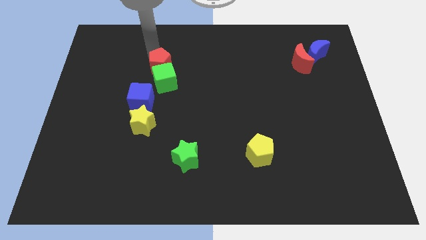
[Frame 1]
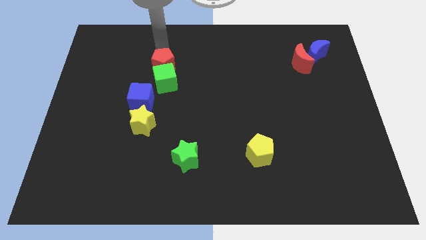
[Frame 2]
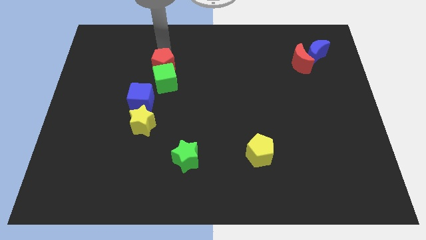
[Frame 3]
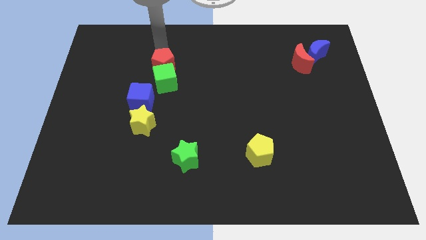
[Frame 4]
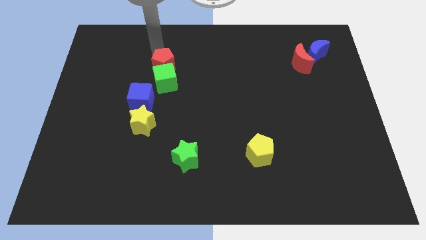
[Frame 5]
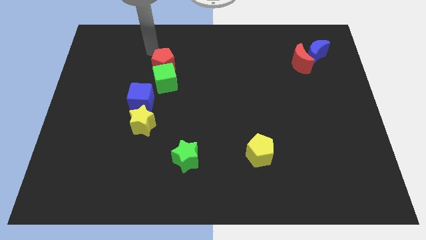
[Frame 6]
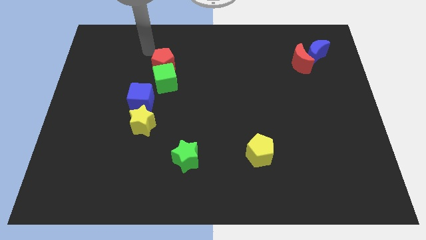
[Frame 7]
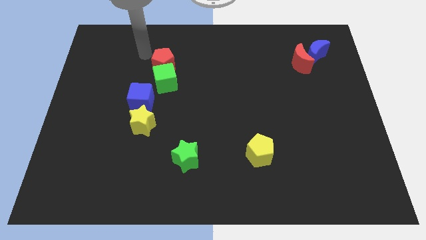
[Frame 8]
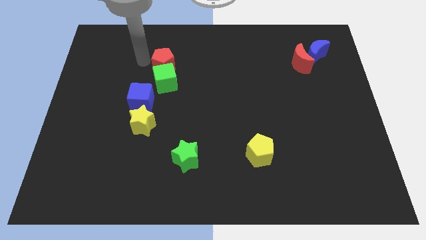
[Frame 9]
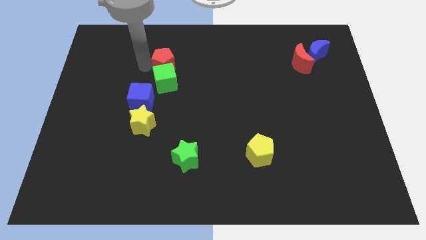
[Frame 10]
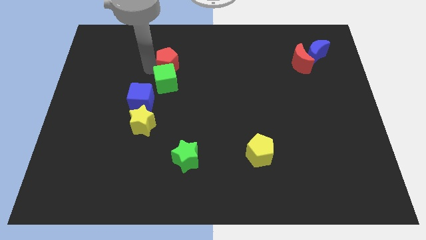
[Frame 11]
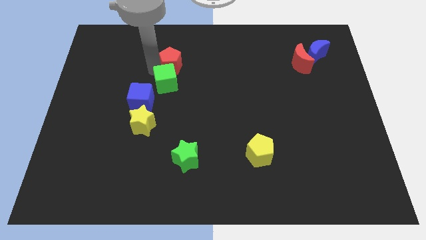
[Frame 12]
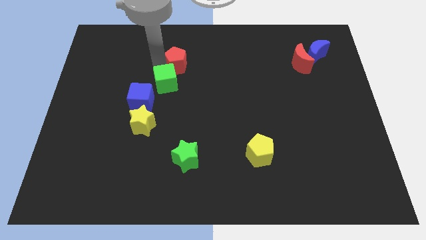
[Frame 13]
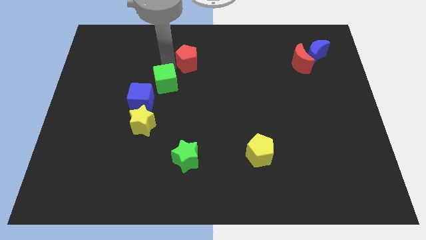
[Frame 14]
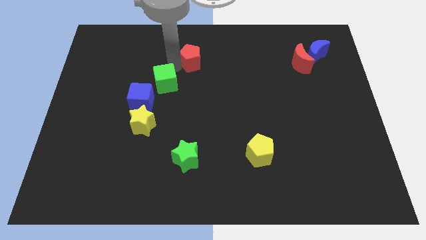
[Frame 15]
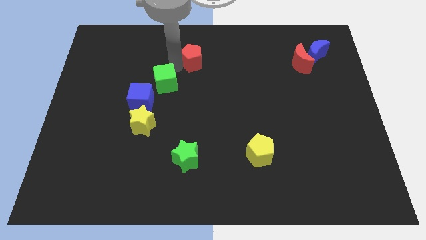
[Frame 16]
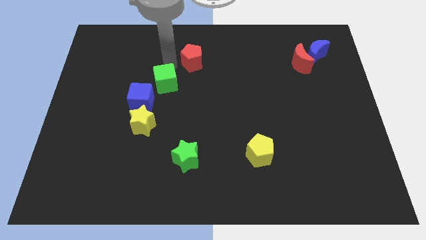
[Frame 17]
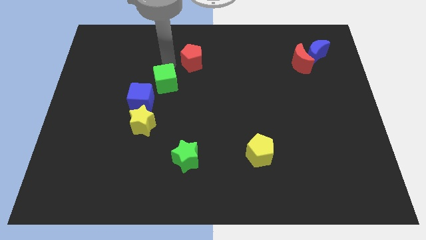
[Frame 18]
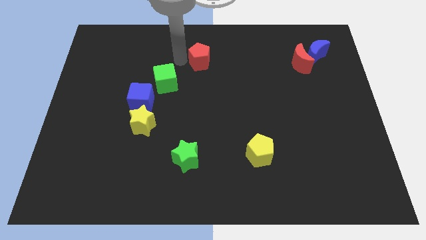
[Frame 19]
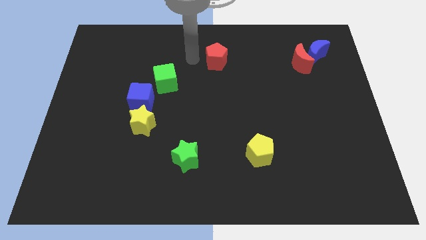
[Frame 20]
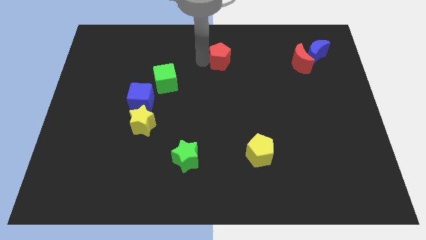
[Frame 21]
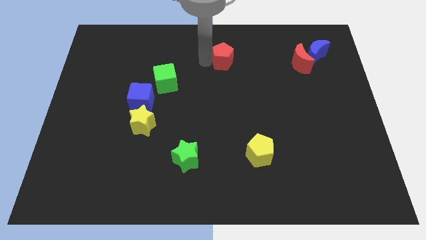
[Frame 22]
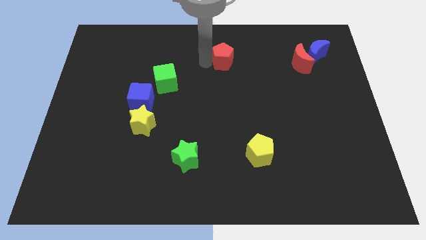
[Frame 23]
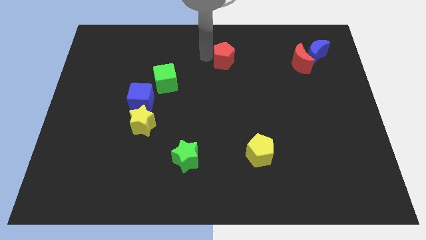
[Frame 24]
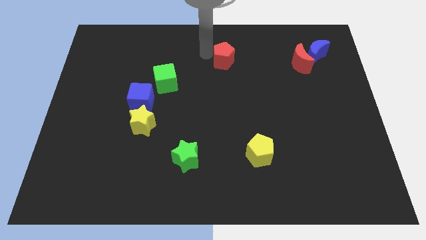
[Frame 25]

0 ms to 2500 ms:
move the red pentagon away from the green cube

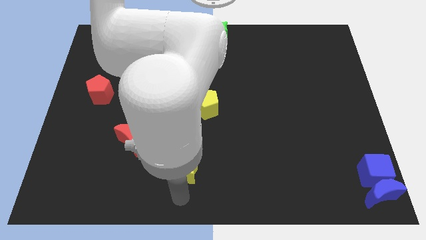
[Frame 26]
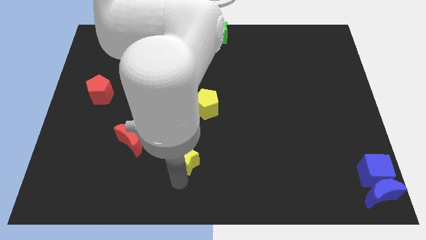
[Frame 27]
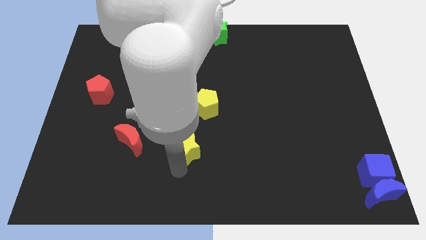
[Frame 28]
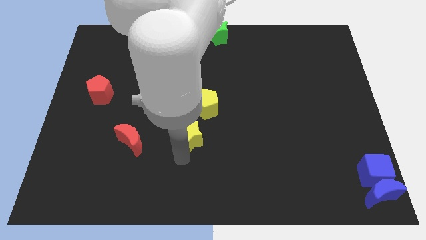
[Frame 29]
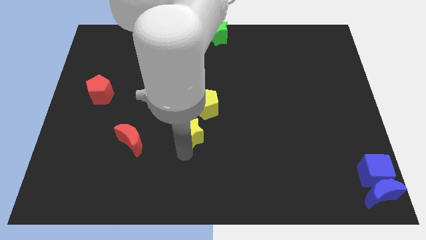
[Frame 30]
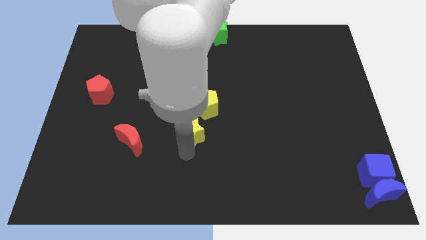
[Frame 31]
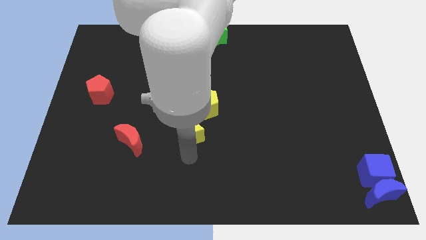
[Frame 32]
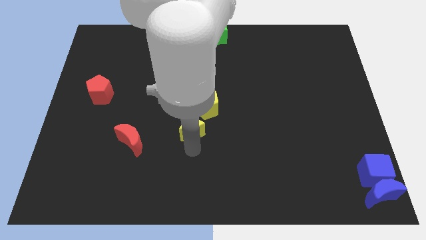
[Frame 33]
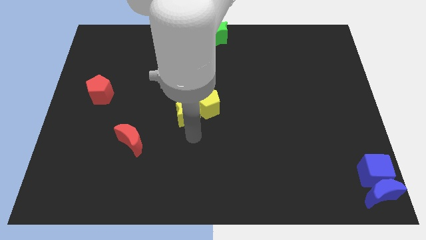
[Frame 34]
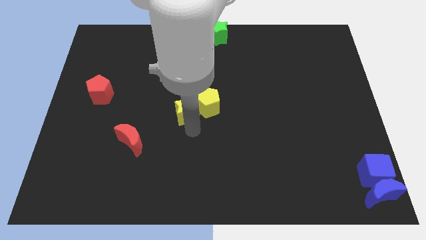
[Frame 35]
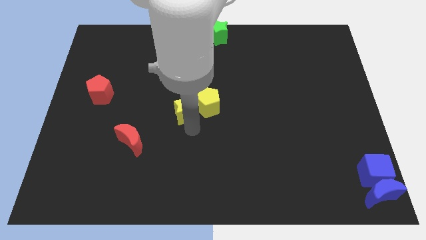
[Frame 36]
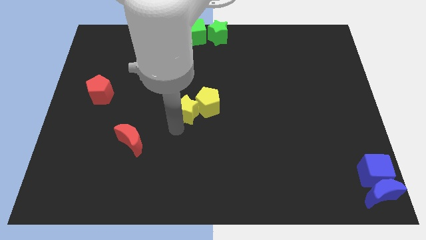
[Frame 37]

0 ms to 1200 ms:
move yellow star left to the yellow pentagon

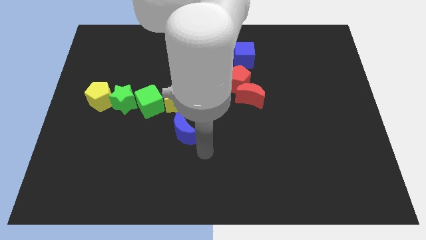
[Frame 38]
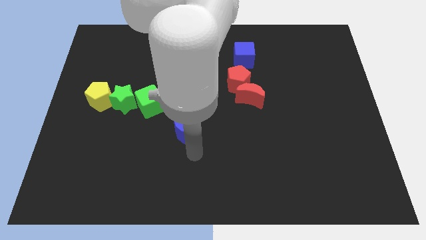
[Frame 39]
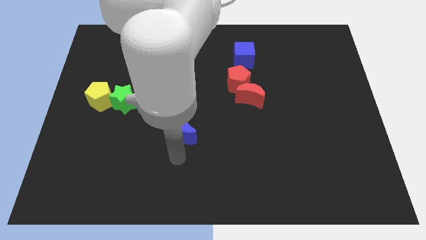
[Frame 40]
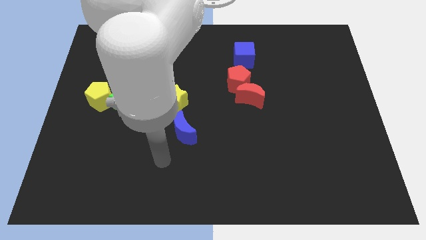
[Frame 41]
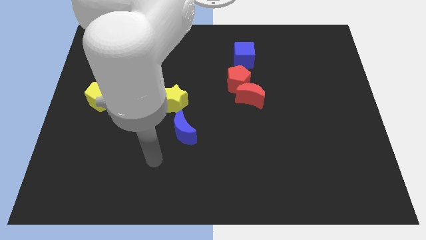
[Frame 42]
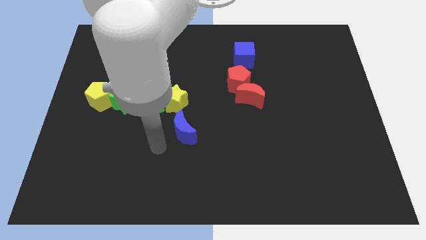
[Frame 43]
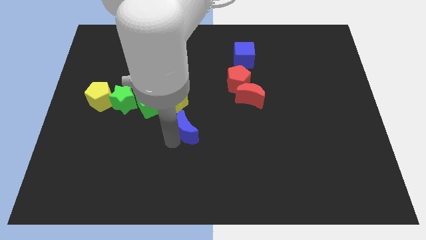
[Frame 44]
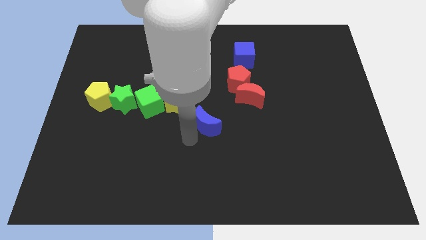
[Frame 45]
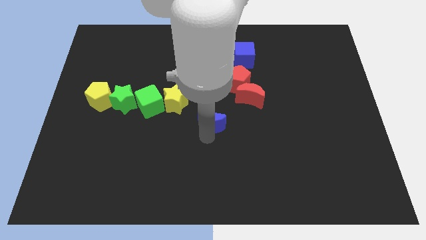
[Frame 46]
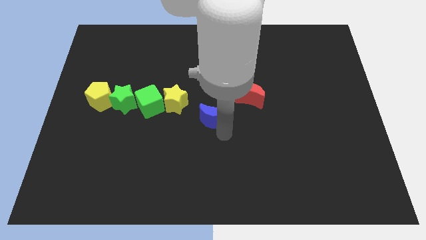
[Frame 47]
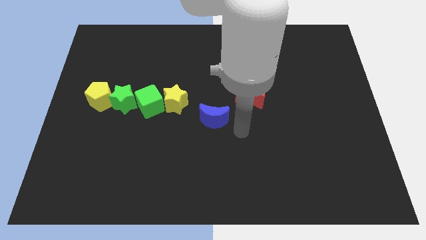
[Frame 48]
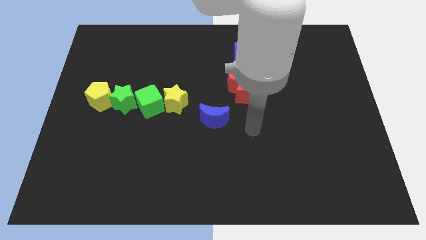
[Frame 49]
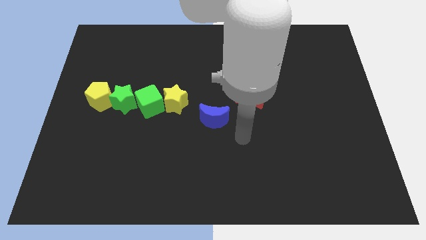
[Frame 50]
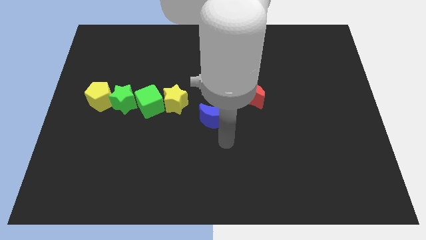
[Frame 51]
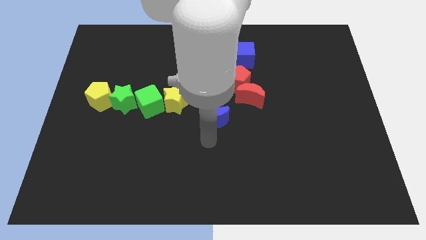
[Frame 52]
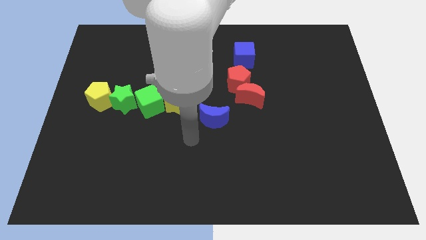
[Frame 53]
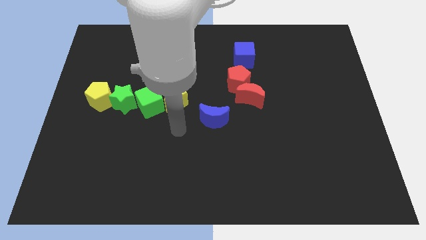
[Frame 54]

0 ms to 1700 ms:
move blue moon in between red moon and yellow star

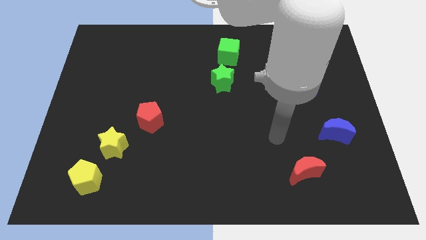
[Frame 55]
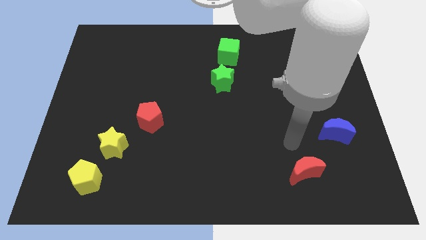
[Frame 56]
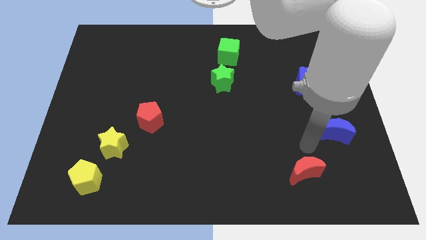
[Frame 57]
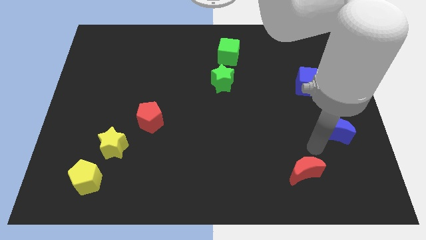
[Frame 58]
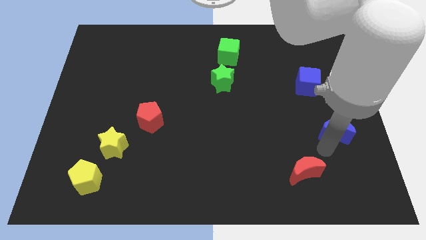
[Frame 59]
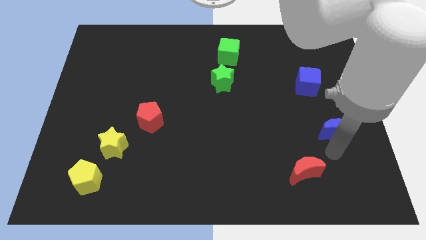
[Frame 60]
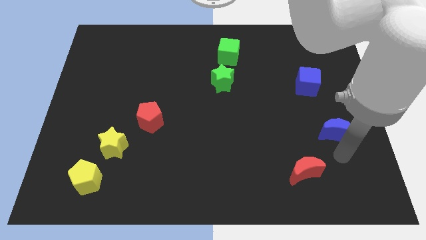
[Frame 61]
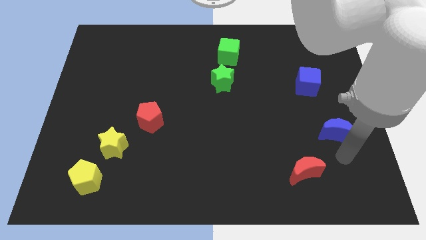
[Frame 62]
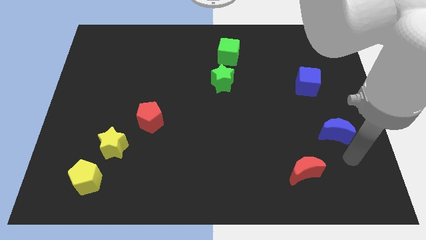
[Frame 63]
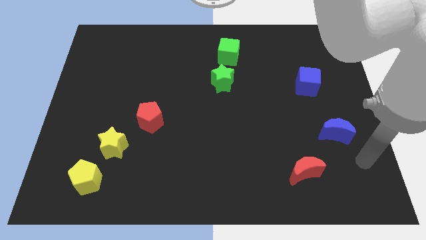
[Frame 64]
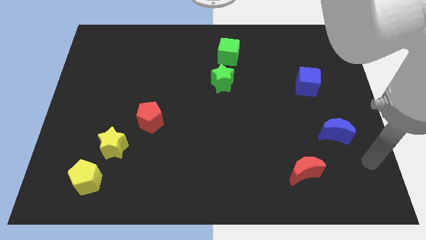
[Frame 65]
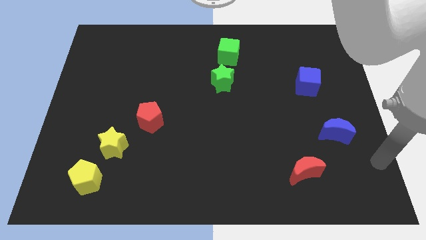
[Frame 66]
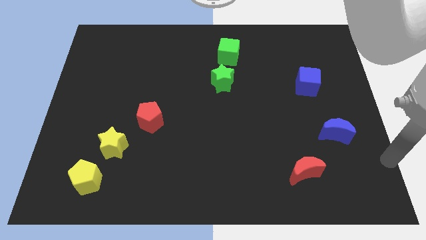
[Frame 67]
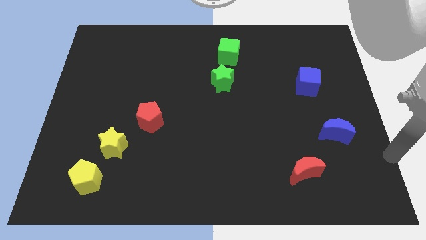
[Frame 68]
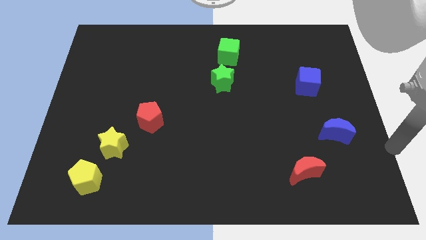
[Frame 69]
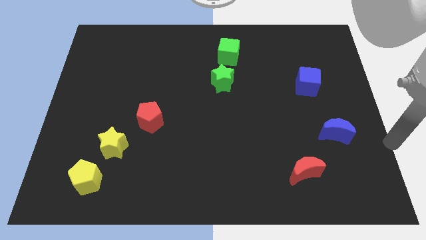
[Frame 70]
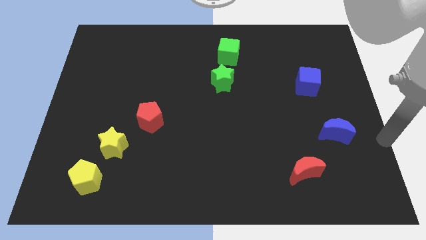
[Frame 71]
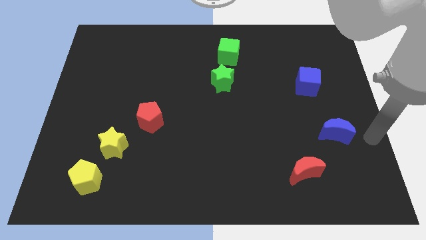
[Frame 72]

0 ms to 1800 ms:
place your arm at the right of the blue crescent

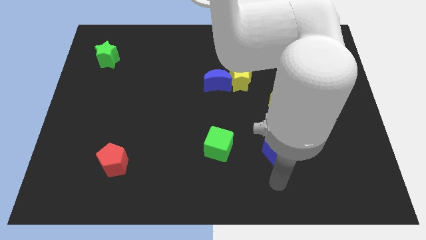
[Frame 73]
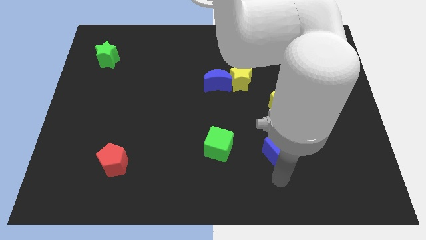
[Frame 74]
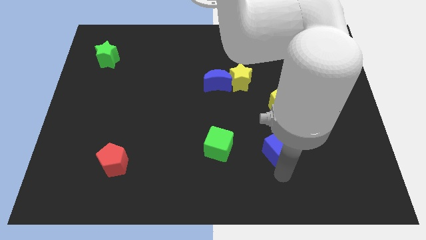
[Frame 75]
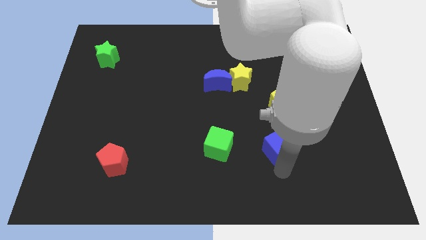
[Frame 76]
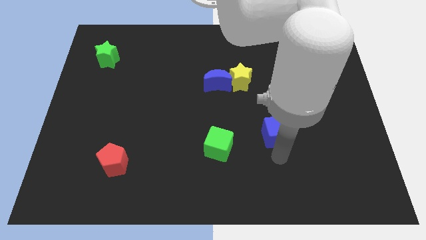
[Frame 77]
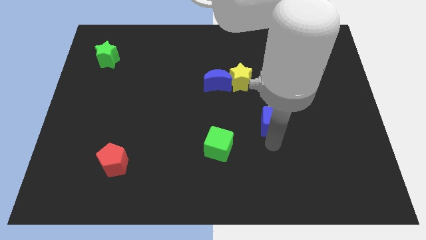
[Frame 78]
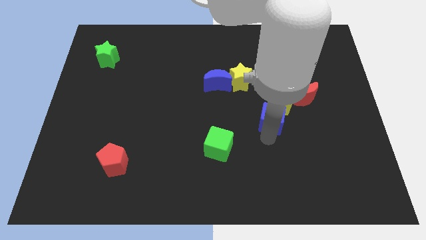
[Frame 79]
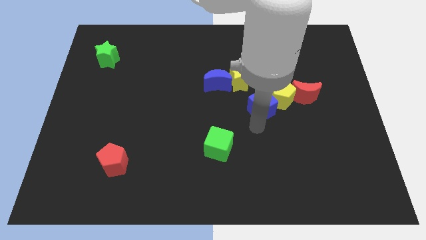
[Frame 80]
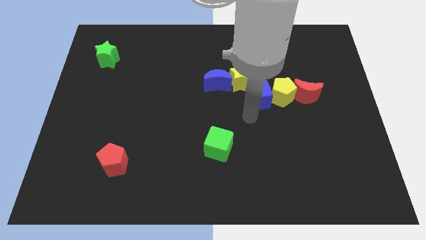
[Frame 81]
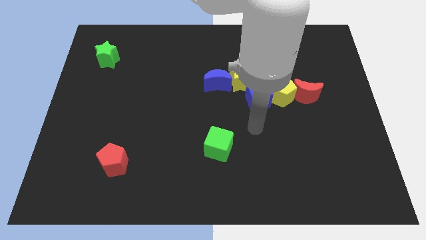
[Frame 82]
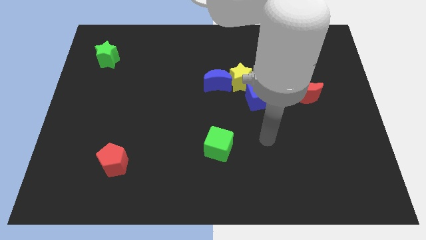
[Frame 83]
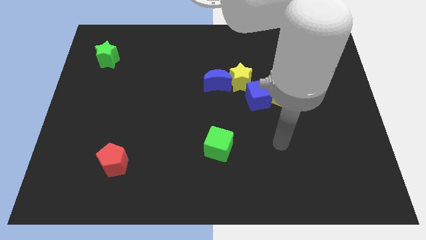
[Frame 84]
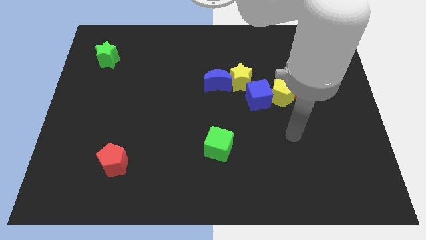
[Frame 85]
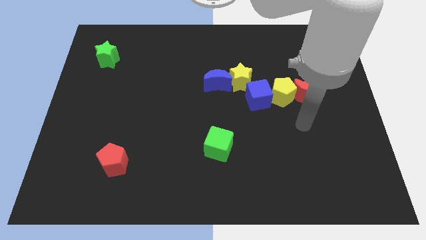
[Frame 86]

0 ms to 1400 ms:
move the blue cube to the left side of the yellow pentagon

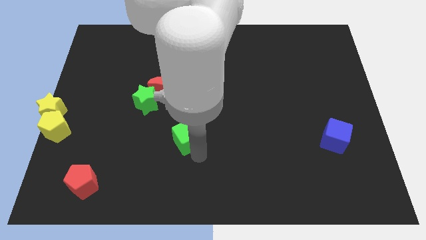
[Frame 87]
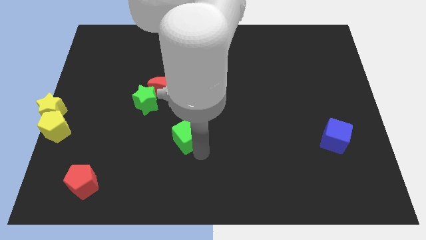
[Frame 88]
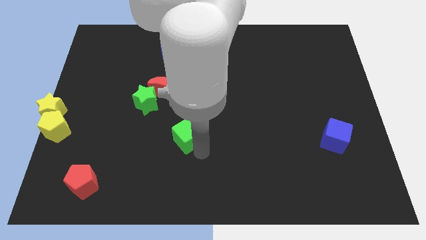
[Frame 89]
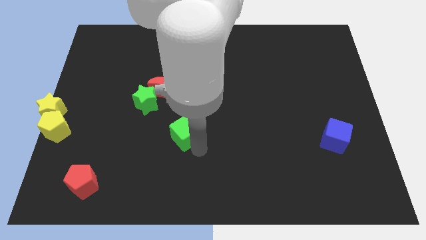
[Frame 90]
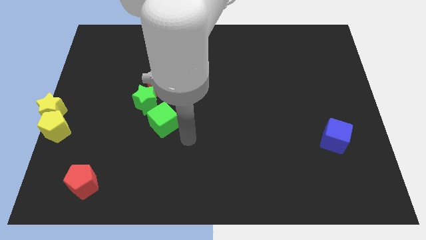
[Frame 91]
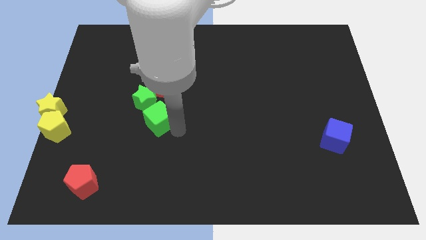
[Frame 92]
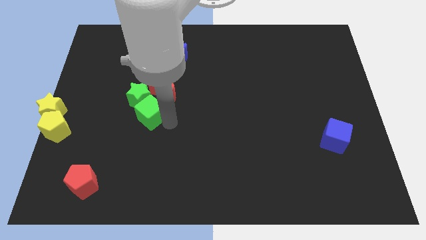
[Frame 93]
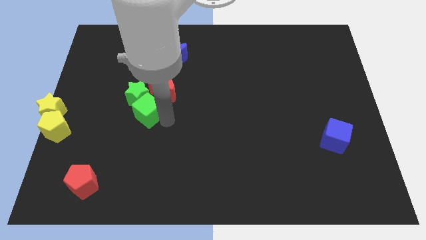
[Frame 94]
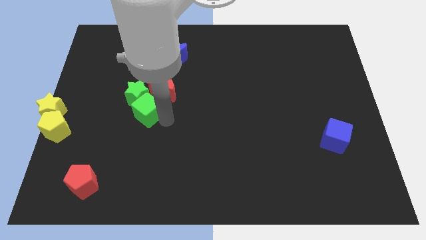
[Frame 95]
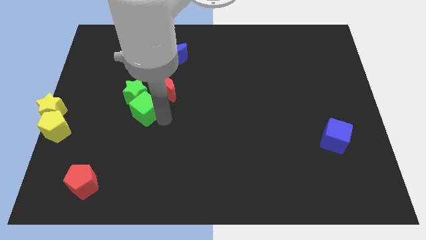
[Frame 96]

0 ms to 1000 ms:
move the green cube diagonally below the green star
